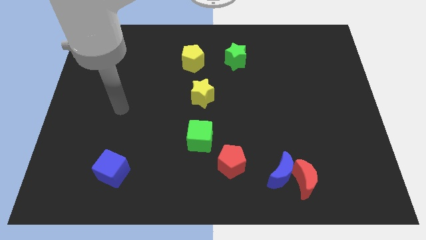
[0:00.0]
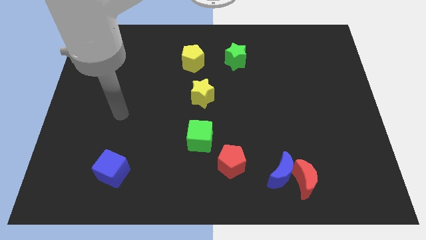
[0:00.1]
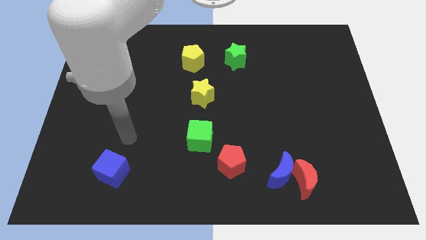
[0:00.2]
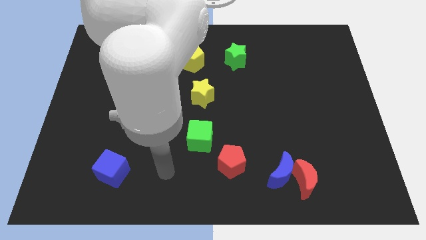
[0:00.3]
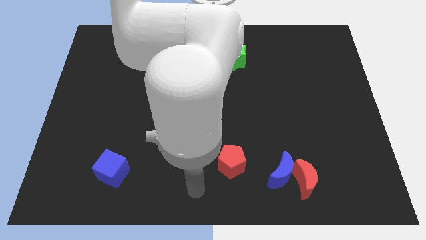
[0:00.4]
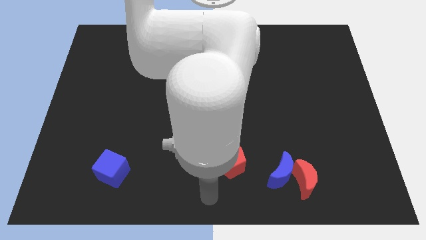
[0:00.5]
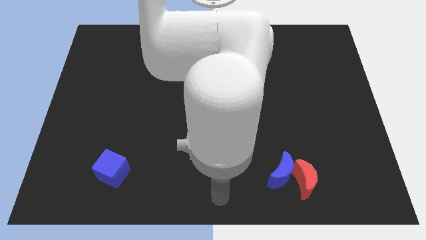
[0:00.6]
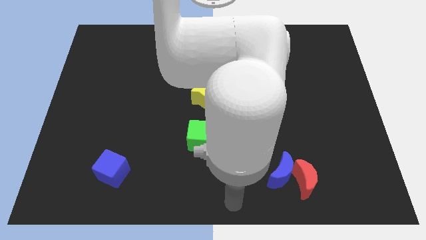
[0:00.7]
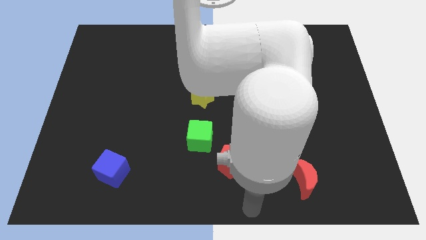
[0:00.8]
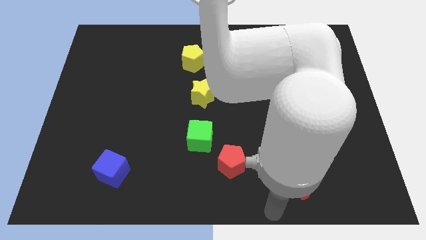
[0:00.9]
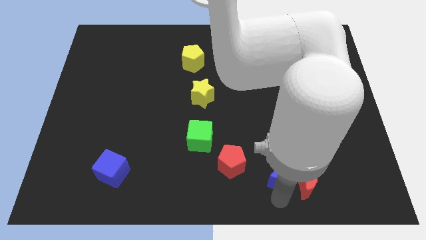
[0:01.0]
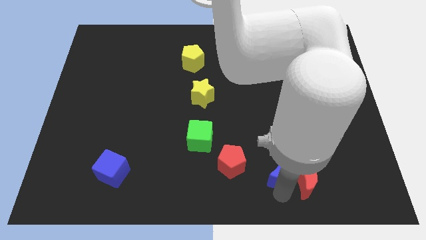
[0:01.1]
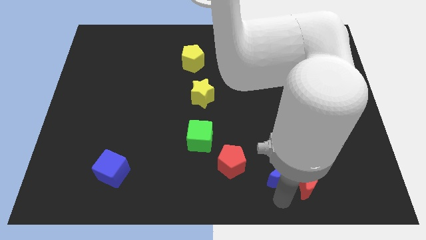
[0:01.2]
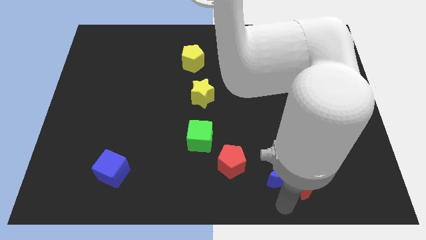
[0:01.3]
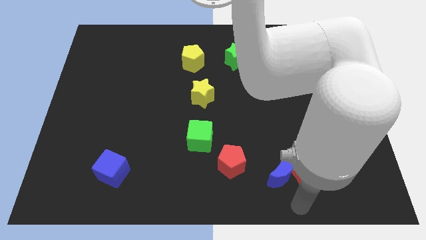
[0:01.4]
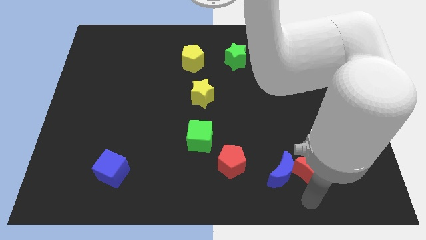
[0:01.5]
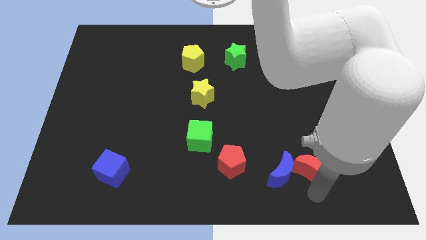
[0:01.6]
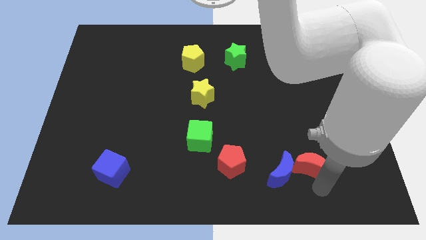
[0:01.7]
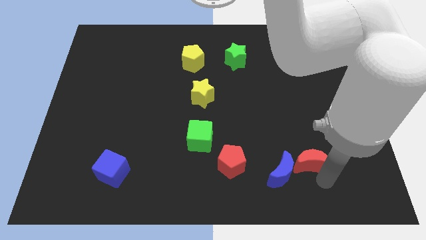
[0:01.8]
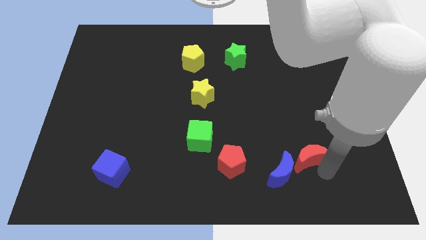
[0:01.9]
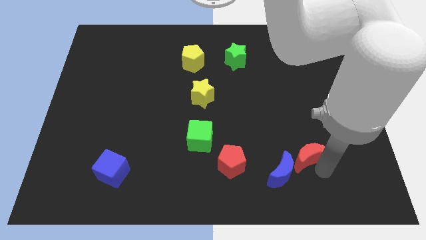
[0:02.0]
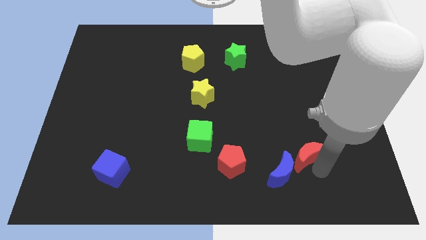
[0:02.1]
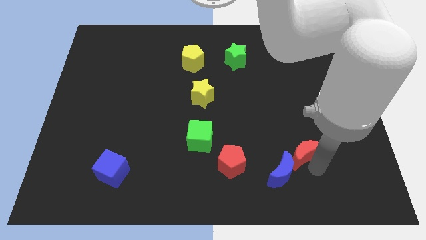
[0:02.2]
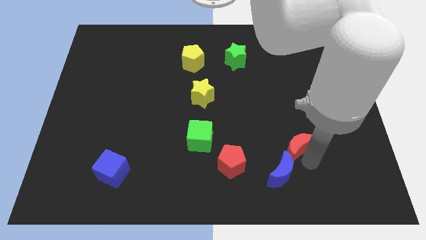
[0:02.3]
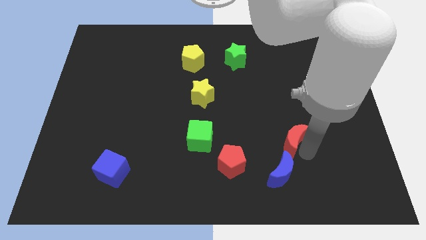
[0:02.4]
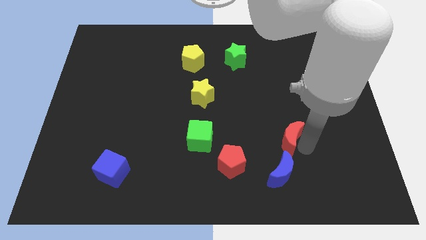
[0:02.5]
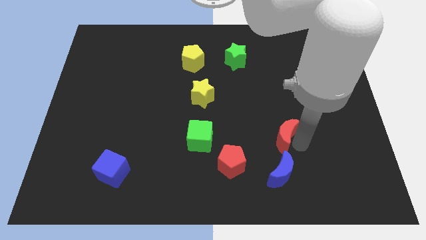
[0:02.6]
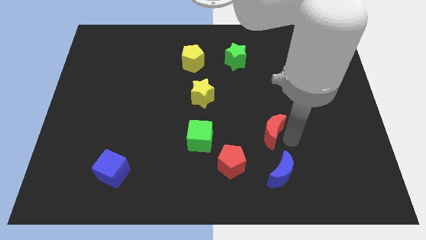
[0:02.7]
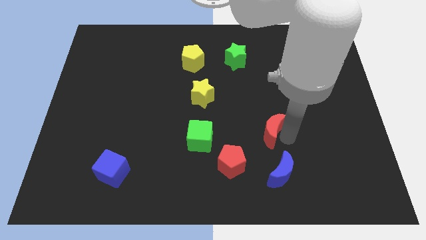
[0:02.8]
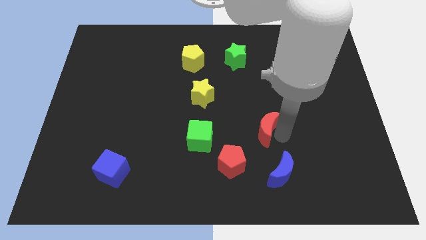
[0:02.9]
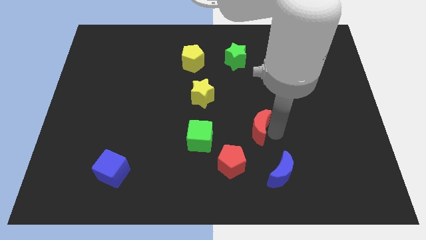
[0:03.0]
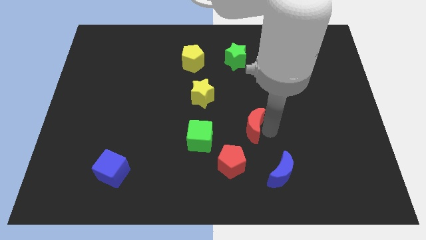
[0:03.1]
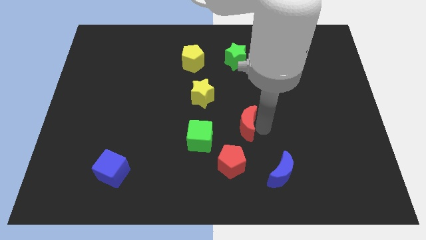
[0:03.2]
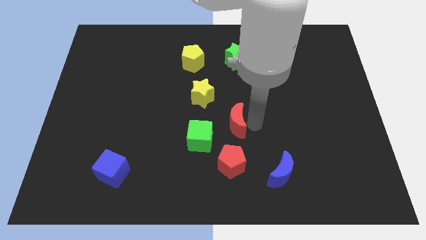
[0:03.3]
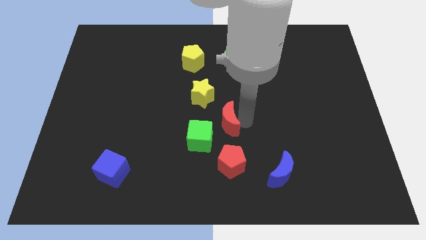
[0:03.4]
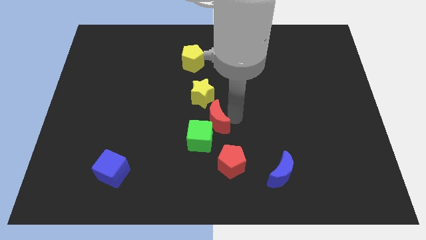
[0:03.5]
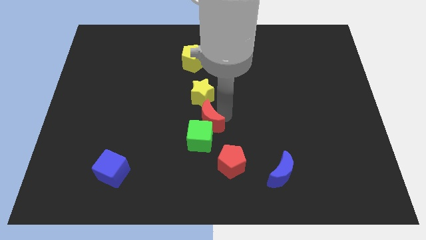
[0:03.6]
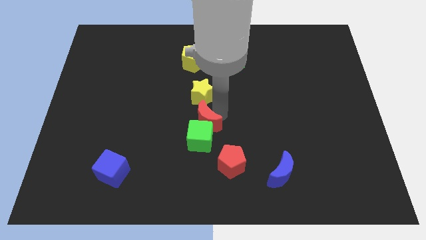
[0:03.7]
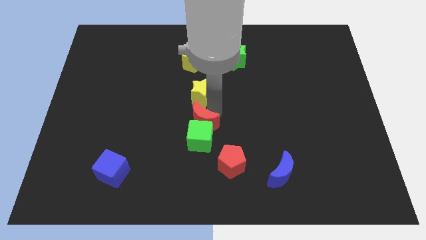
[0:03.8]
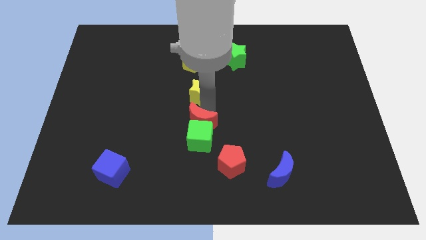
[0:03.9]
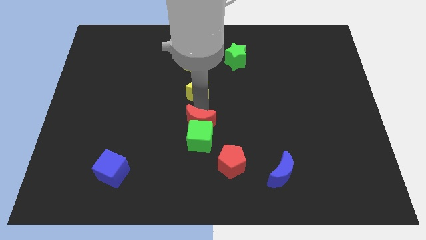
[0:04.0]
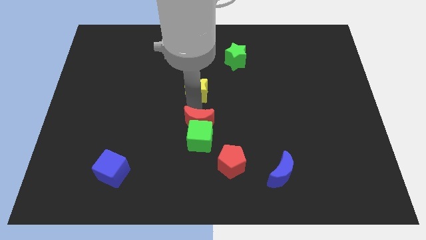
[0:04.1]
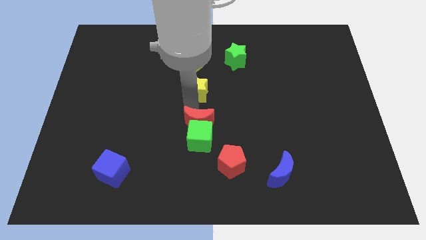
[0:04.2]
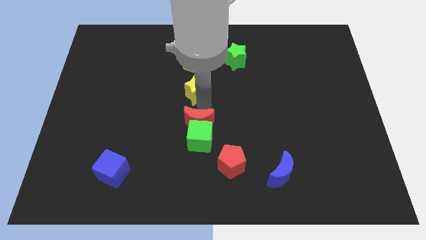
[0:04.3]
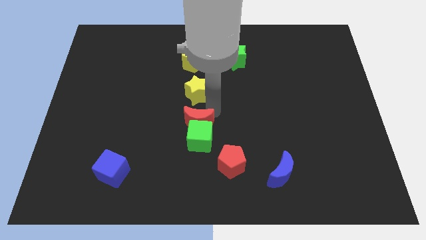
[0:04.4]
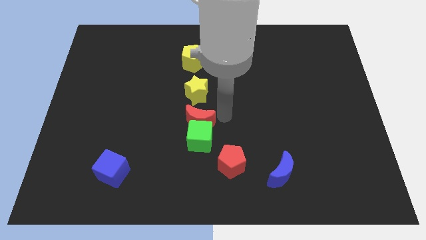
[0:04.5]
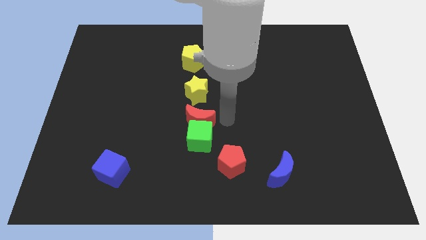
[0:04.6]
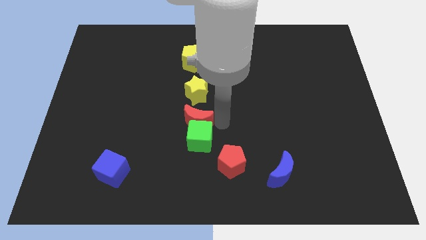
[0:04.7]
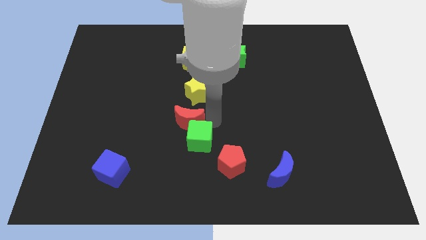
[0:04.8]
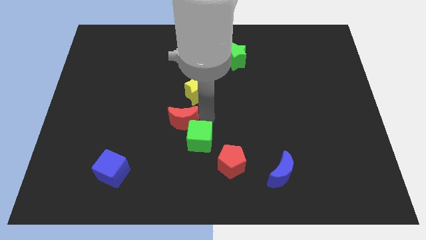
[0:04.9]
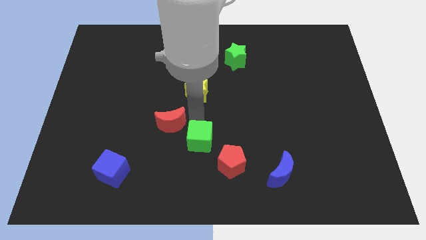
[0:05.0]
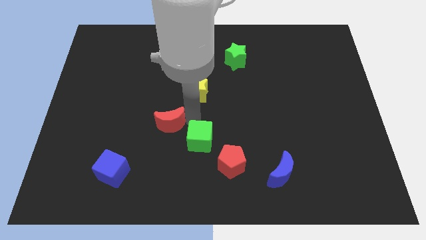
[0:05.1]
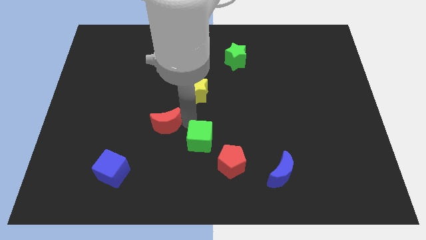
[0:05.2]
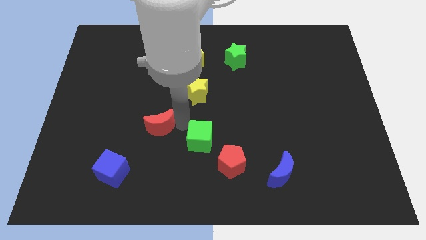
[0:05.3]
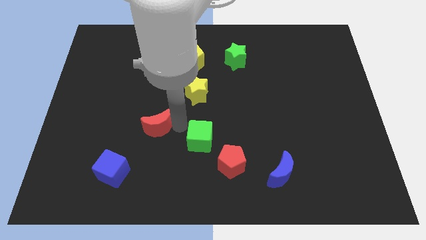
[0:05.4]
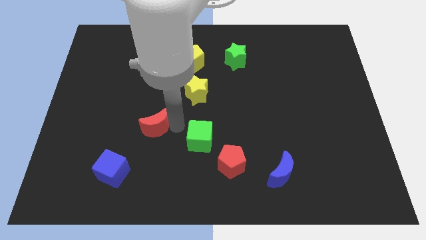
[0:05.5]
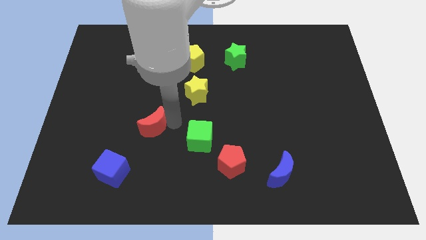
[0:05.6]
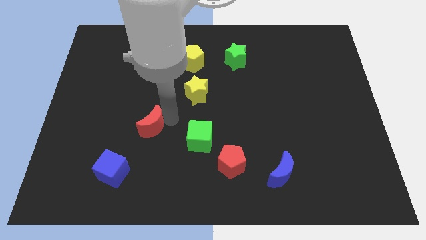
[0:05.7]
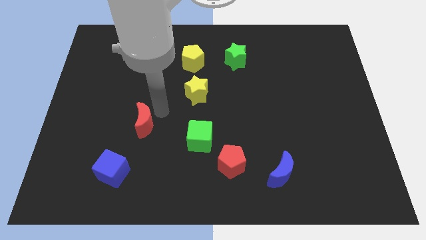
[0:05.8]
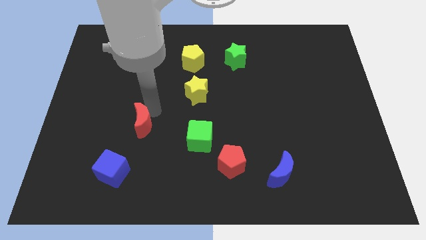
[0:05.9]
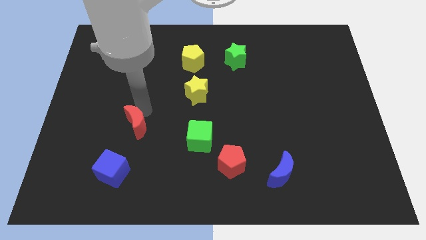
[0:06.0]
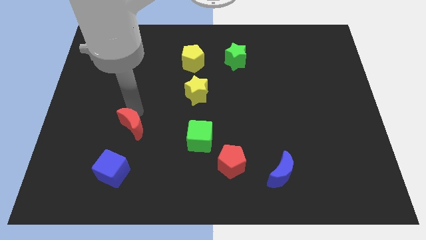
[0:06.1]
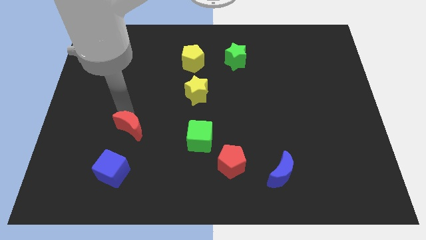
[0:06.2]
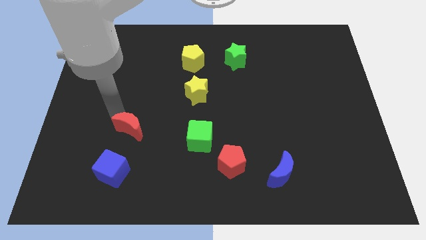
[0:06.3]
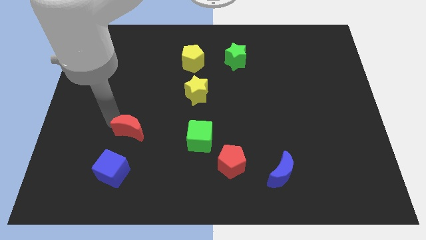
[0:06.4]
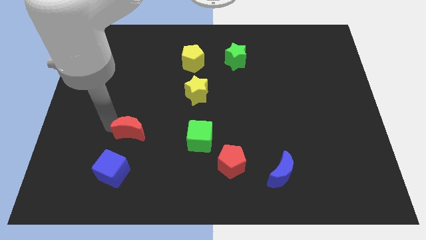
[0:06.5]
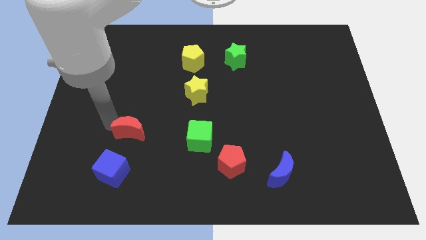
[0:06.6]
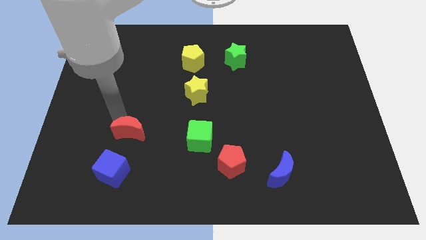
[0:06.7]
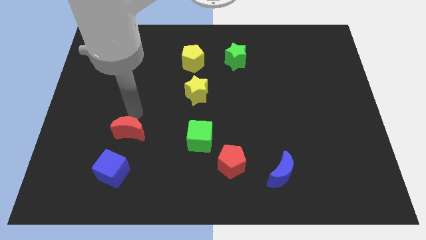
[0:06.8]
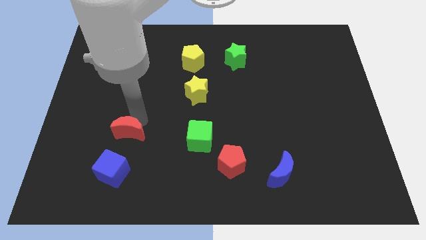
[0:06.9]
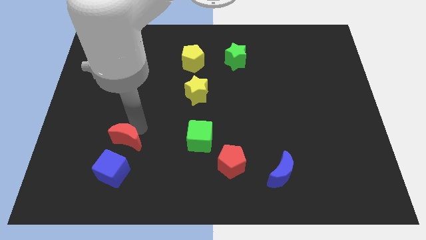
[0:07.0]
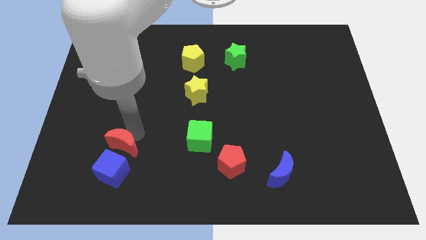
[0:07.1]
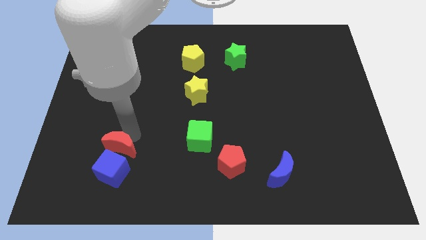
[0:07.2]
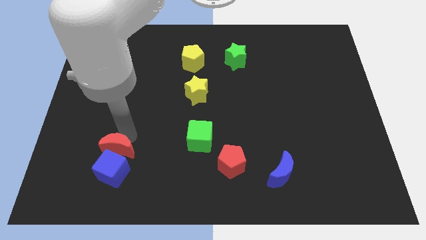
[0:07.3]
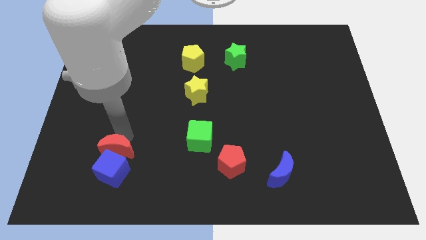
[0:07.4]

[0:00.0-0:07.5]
slide the red moon towards the blue cube

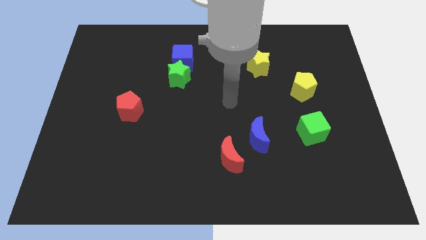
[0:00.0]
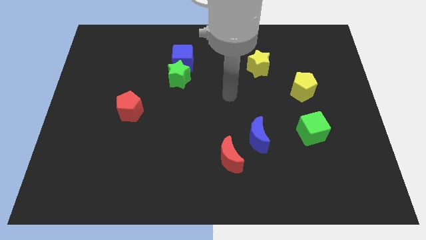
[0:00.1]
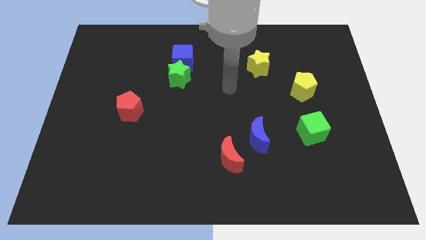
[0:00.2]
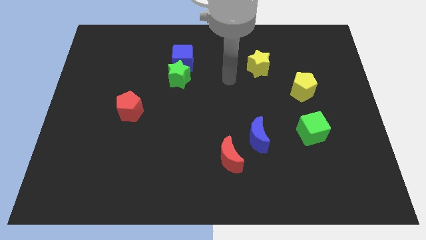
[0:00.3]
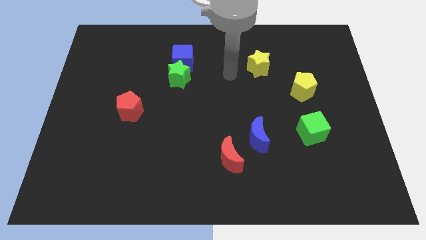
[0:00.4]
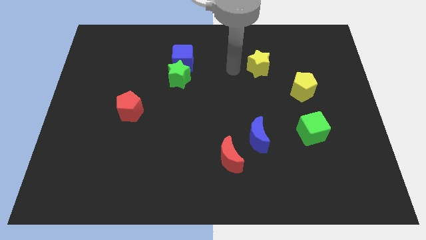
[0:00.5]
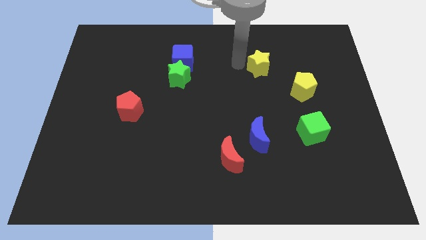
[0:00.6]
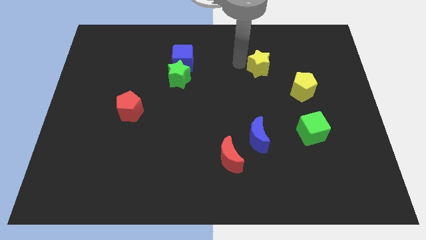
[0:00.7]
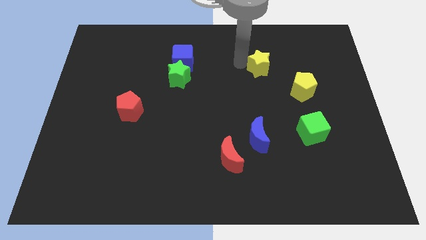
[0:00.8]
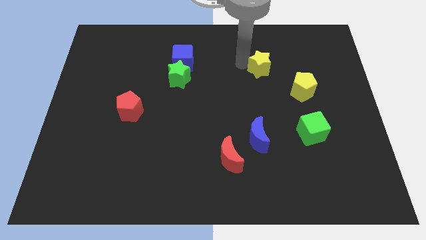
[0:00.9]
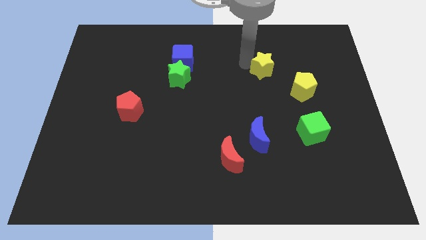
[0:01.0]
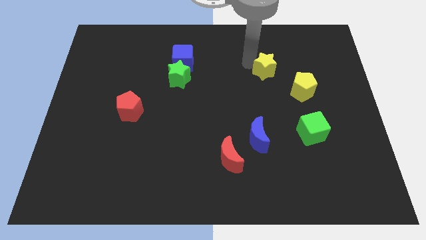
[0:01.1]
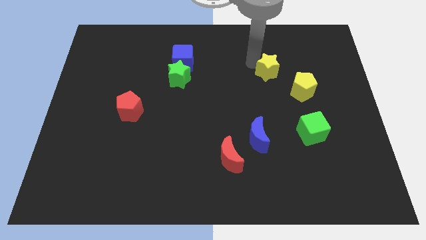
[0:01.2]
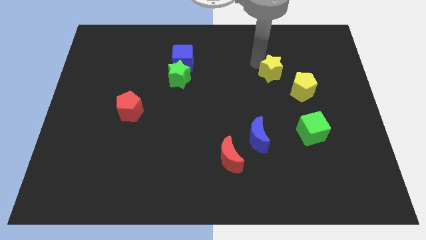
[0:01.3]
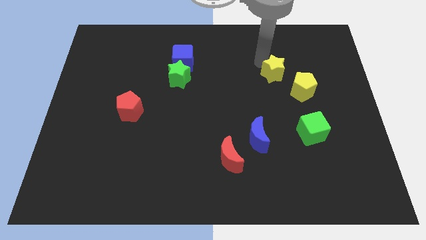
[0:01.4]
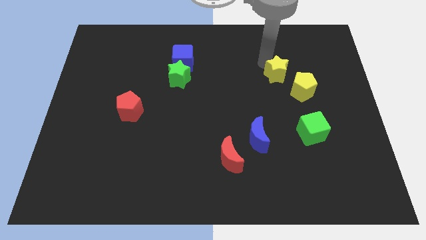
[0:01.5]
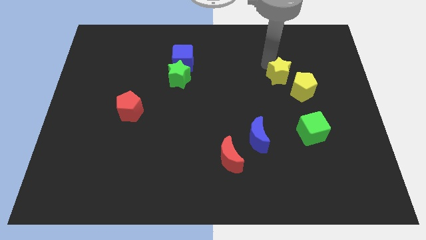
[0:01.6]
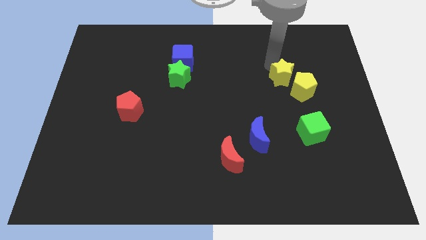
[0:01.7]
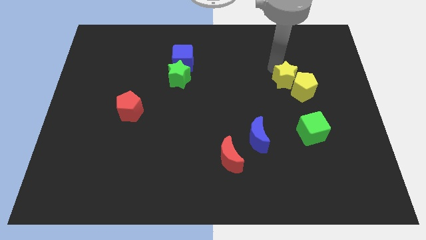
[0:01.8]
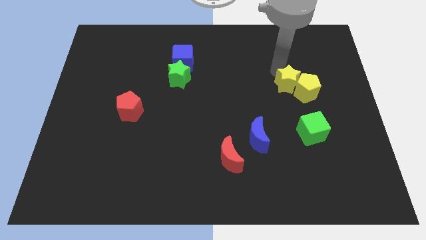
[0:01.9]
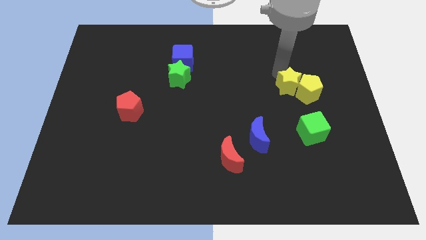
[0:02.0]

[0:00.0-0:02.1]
put the yellow star close to the yellow pentagon
